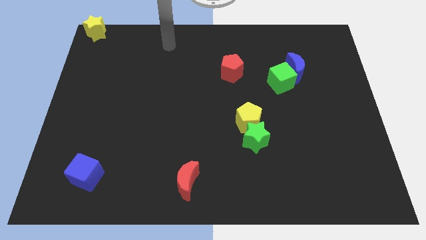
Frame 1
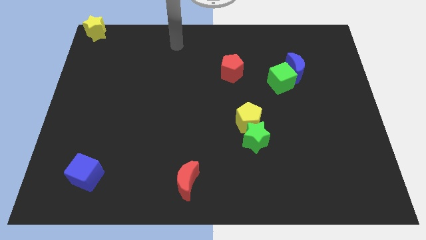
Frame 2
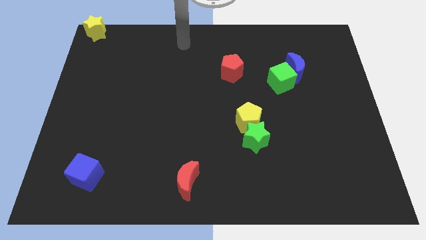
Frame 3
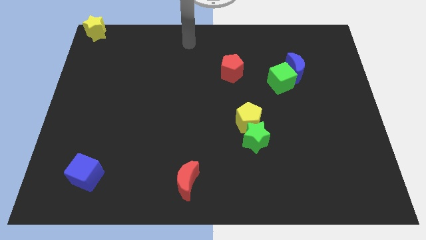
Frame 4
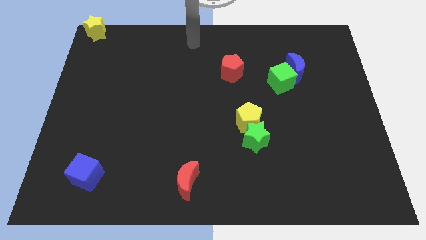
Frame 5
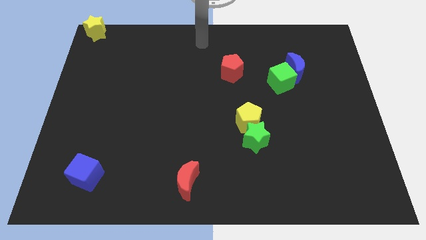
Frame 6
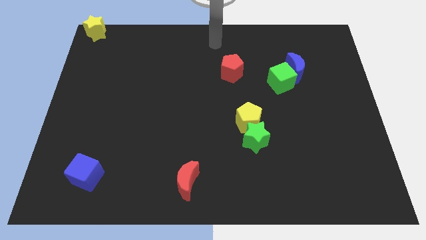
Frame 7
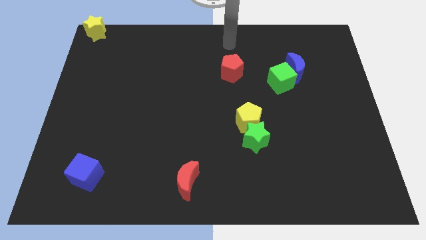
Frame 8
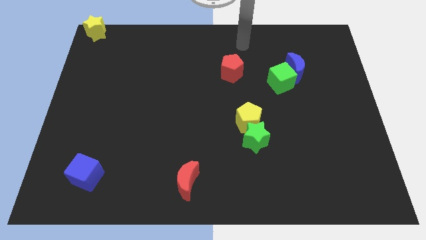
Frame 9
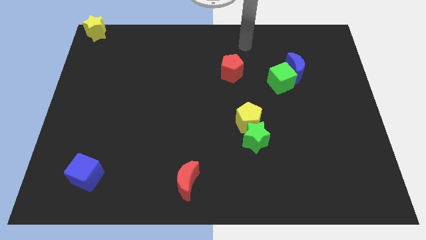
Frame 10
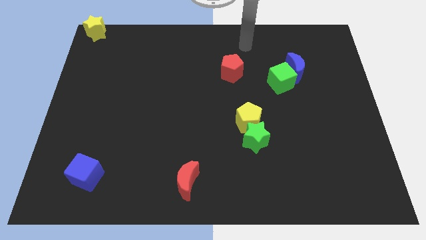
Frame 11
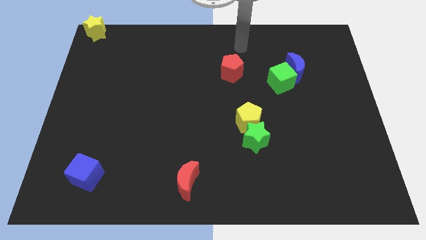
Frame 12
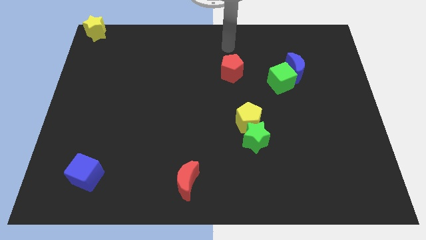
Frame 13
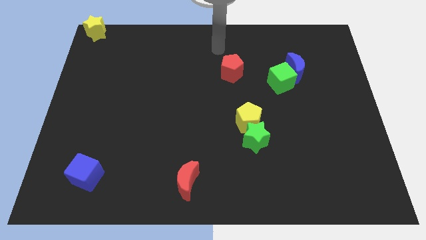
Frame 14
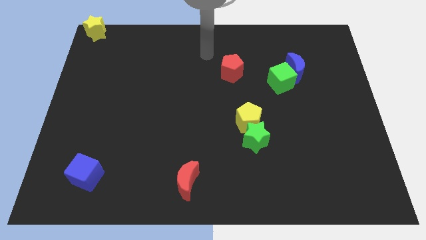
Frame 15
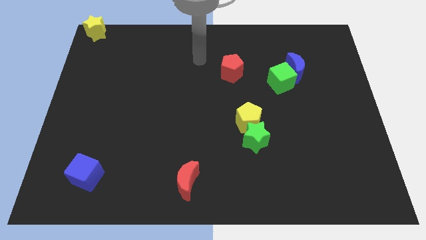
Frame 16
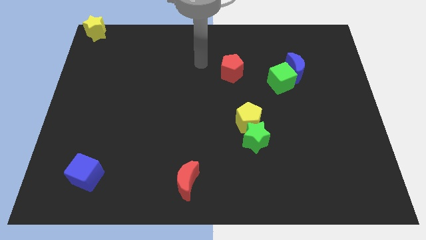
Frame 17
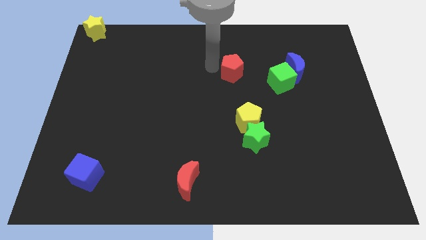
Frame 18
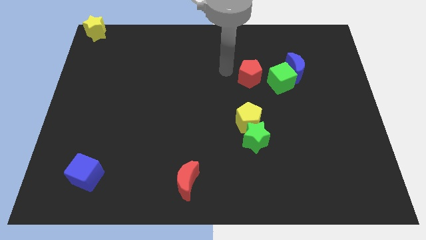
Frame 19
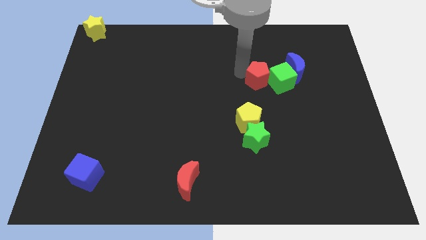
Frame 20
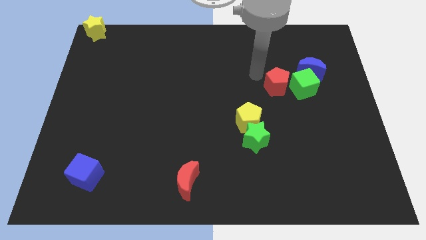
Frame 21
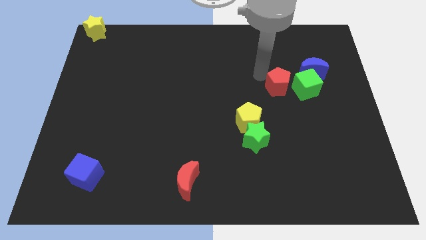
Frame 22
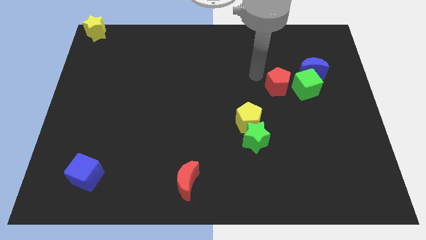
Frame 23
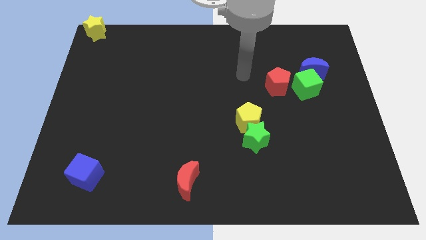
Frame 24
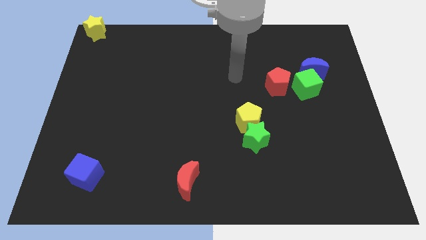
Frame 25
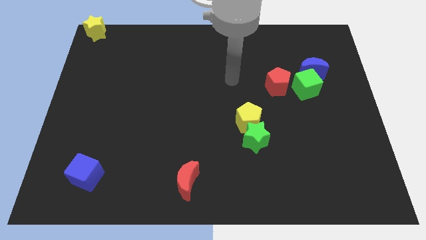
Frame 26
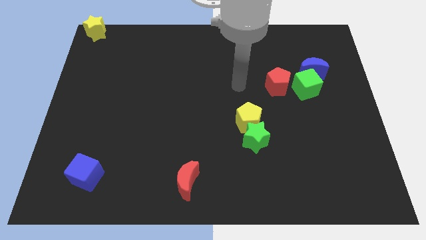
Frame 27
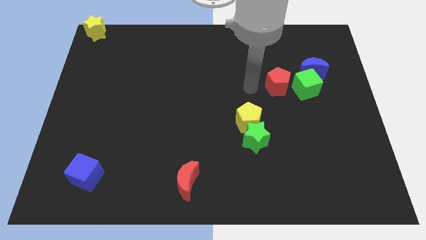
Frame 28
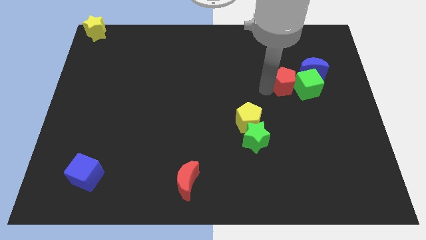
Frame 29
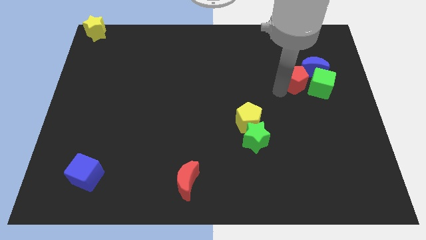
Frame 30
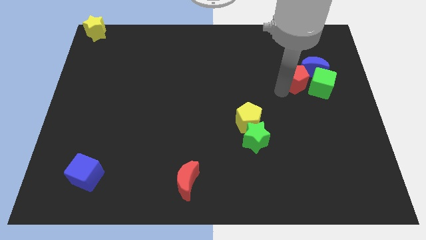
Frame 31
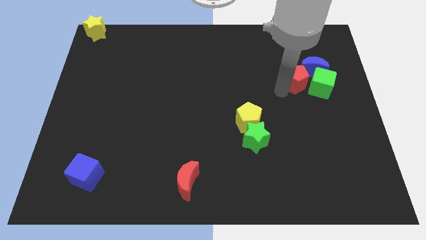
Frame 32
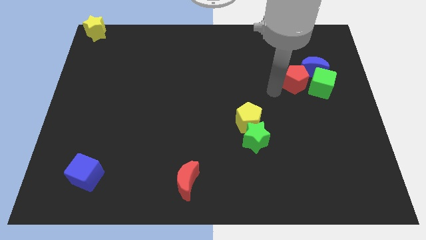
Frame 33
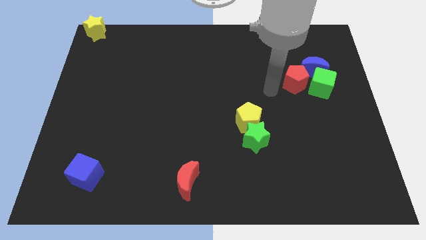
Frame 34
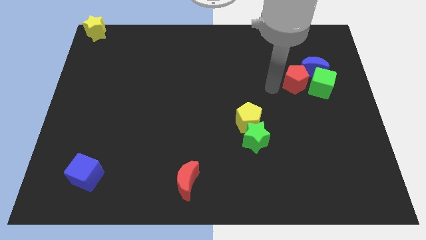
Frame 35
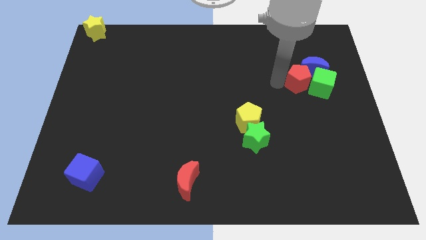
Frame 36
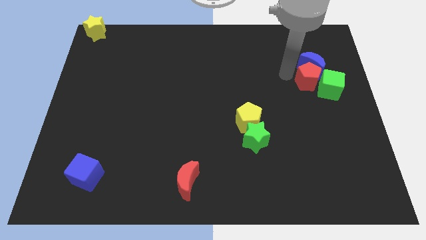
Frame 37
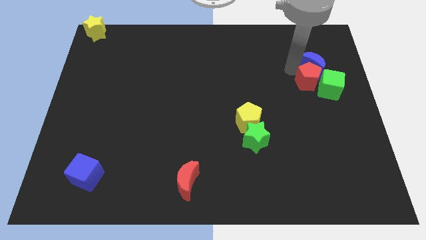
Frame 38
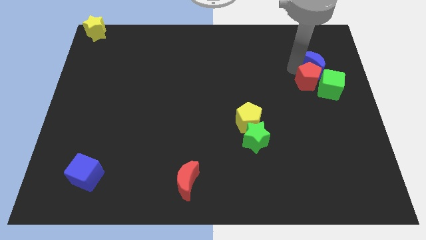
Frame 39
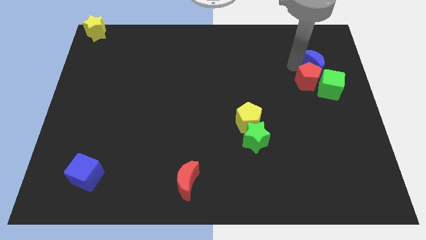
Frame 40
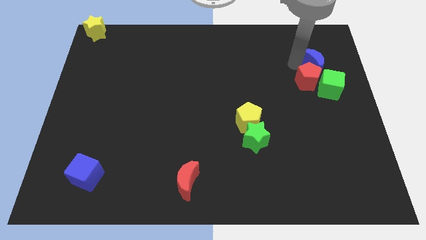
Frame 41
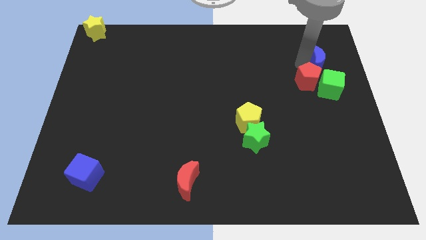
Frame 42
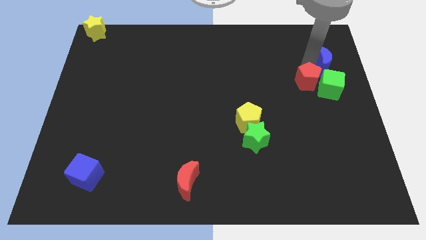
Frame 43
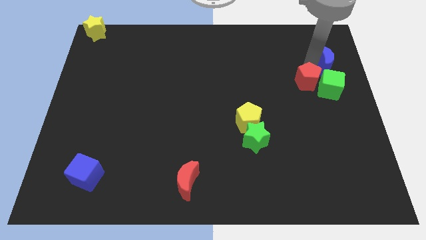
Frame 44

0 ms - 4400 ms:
push the red pentagon into the green cube

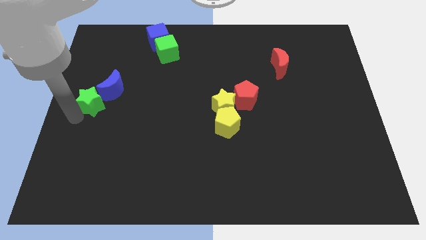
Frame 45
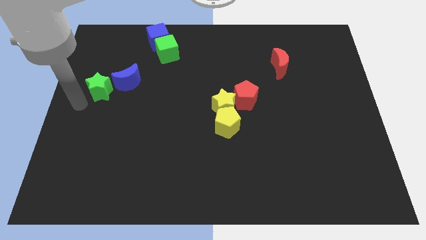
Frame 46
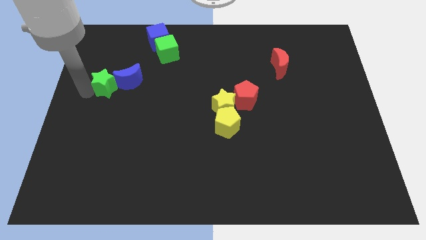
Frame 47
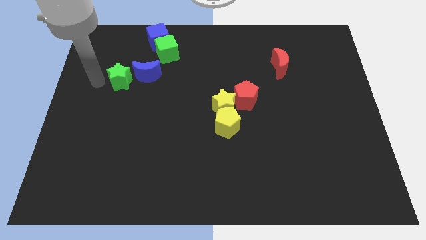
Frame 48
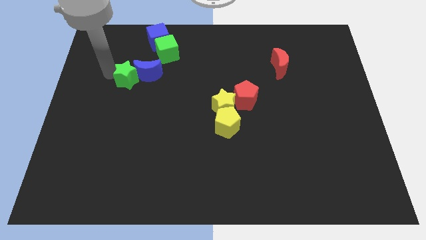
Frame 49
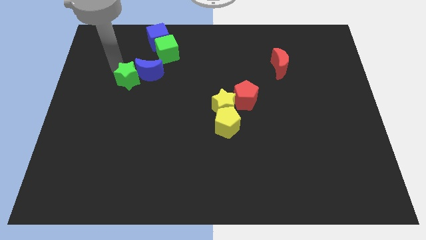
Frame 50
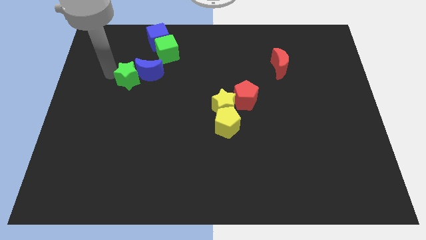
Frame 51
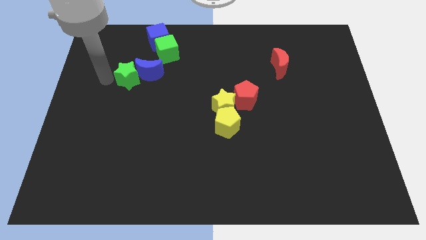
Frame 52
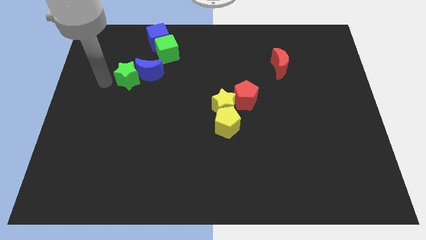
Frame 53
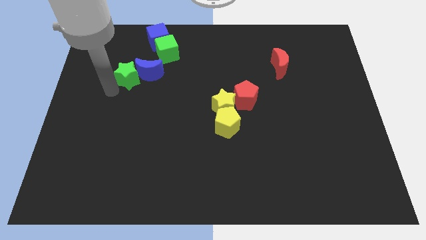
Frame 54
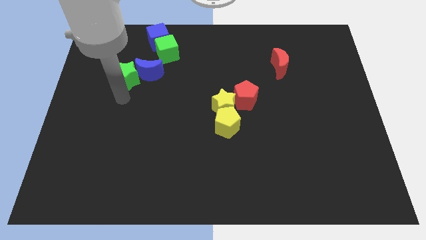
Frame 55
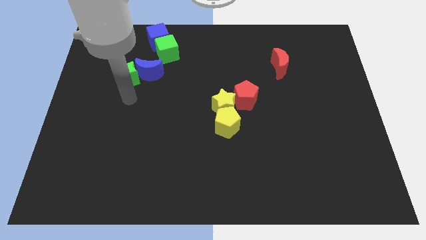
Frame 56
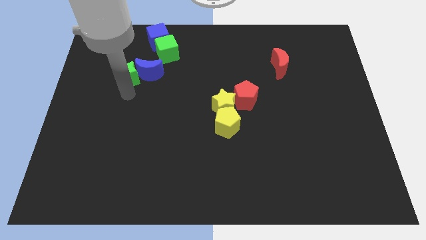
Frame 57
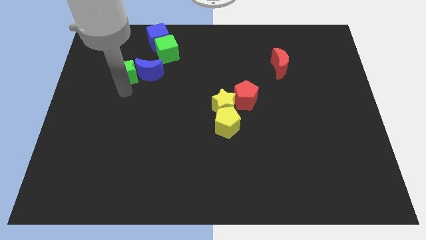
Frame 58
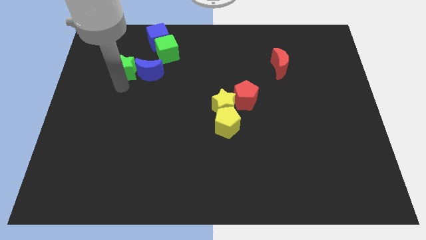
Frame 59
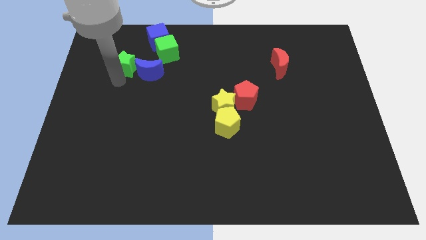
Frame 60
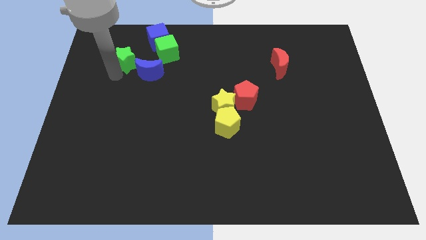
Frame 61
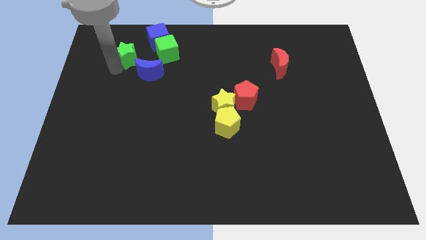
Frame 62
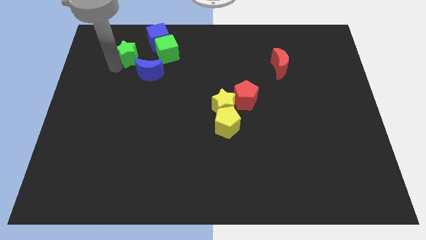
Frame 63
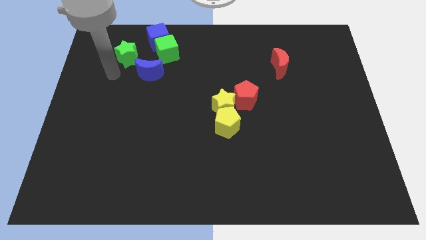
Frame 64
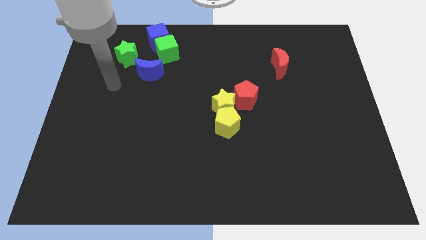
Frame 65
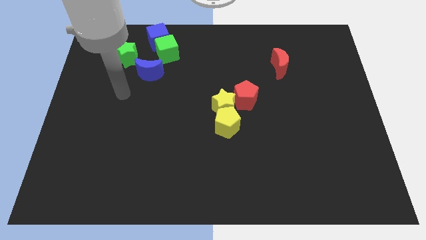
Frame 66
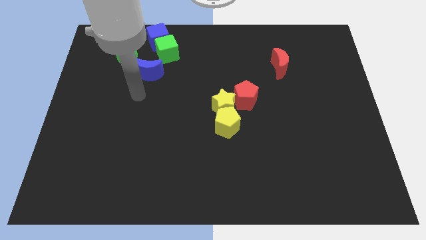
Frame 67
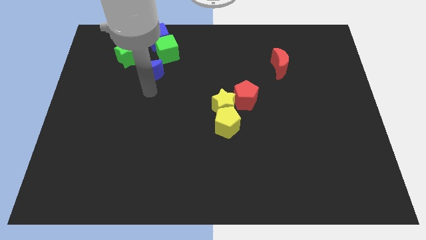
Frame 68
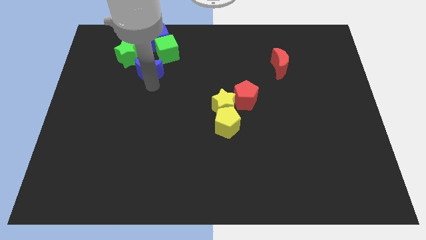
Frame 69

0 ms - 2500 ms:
push green star adjacent to green cube

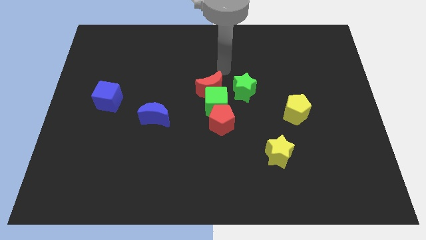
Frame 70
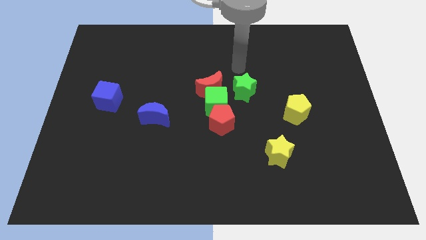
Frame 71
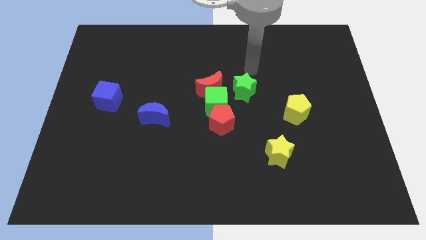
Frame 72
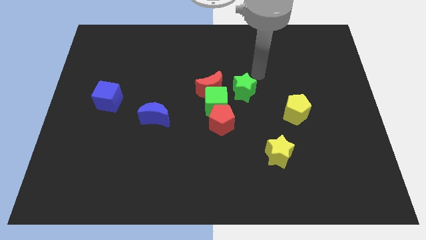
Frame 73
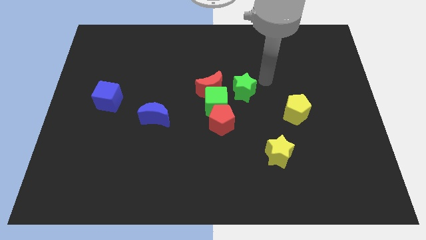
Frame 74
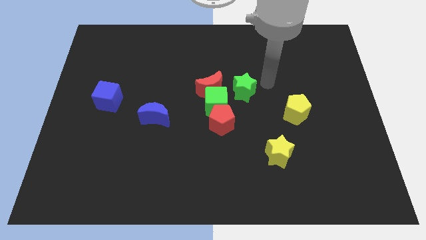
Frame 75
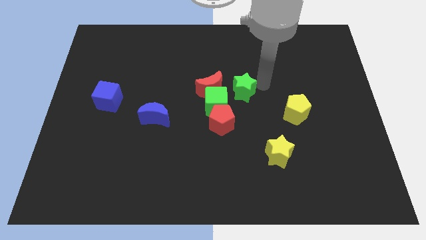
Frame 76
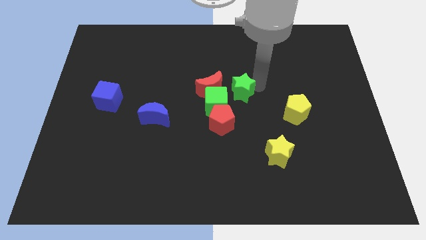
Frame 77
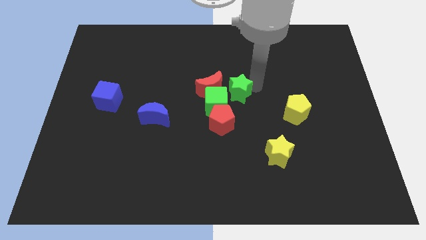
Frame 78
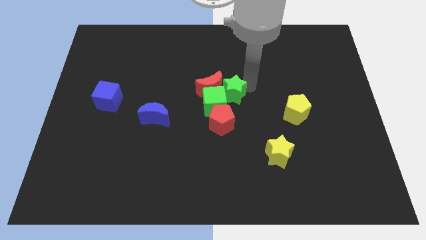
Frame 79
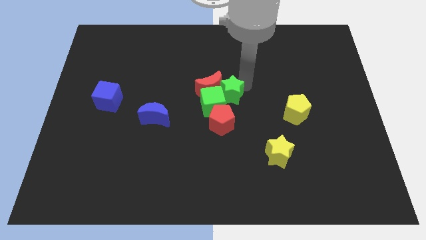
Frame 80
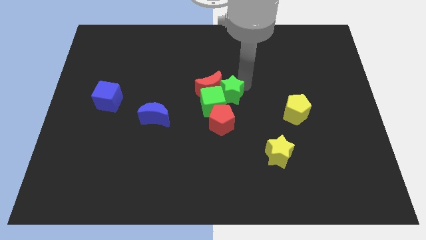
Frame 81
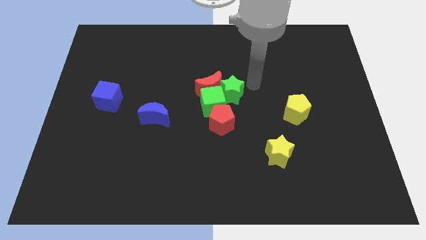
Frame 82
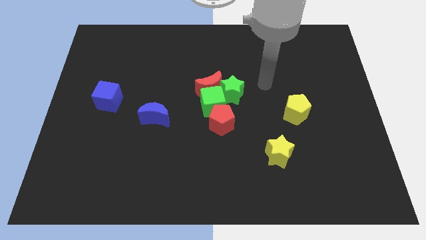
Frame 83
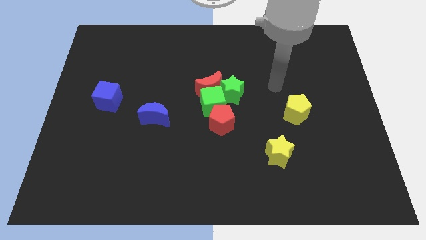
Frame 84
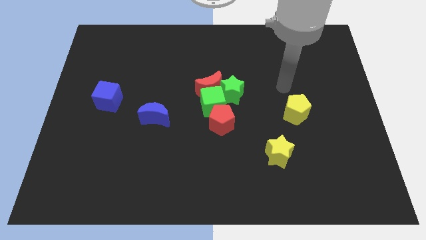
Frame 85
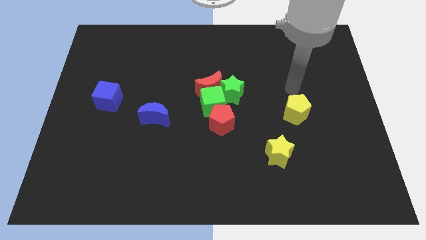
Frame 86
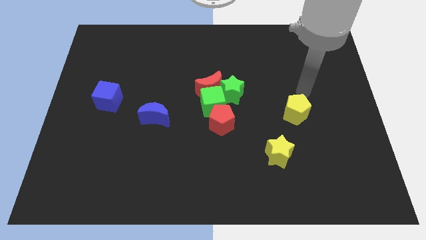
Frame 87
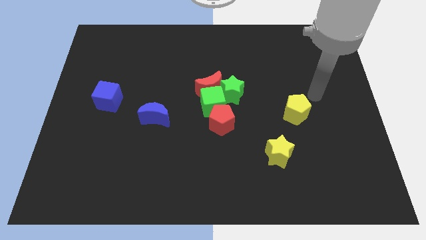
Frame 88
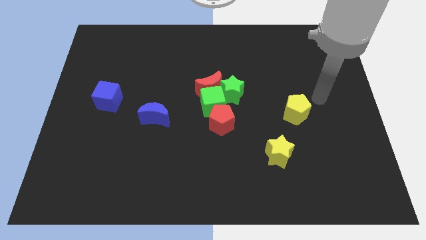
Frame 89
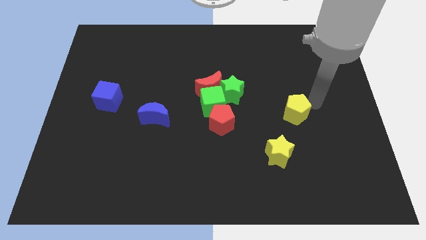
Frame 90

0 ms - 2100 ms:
place the green star right side of green cube

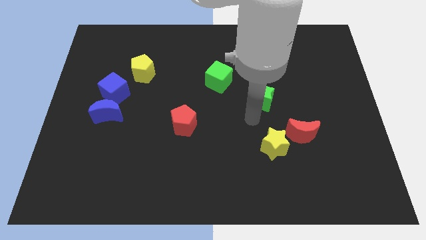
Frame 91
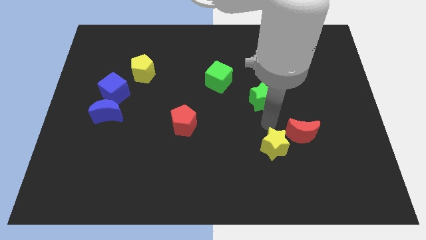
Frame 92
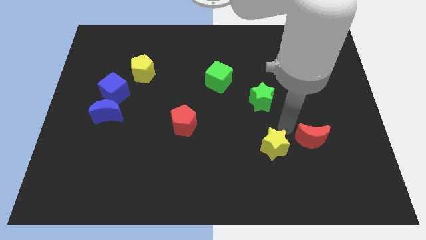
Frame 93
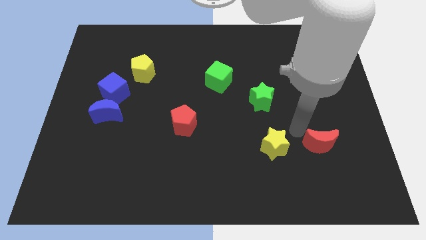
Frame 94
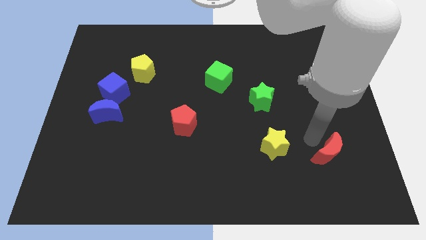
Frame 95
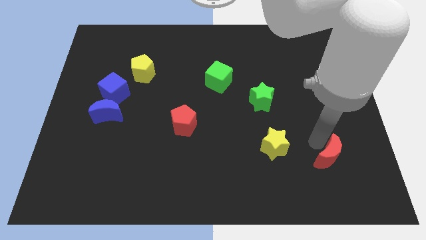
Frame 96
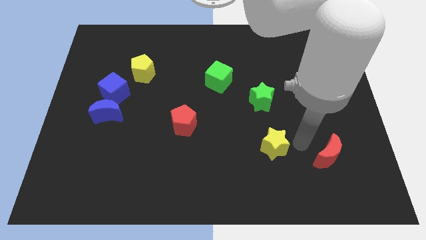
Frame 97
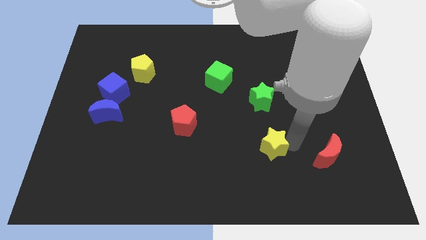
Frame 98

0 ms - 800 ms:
push the red moon to the right of yellow star
